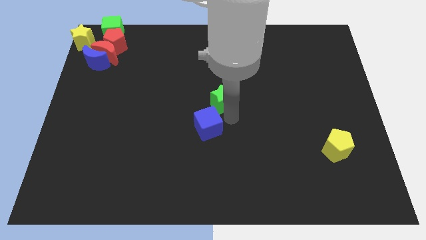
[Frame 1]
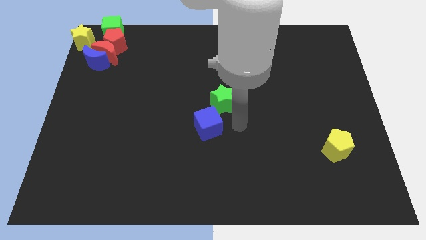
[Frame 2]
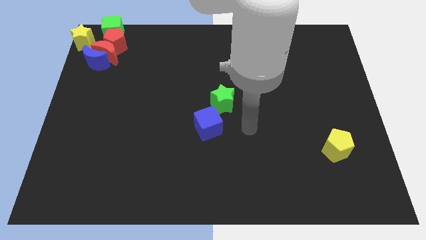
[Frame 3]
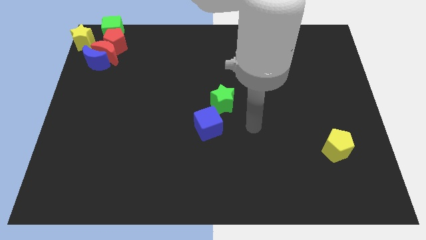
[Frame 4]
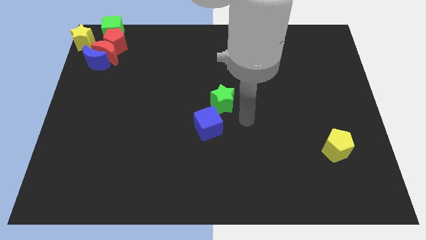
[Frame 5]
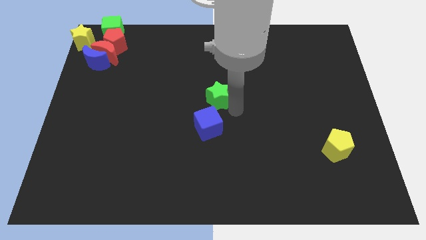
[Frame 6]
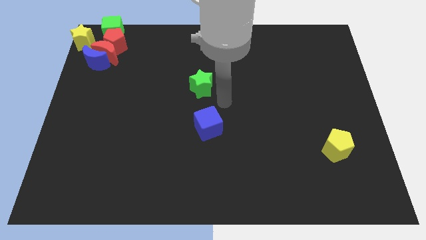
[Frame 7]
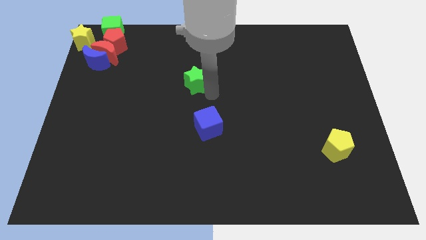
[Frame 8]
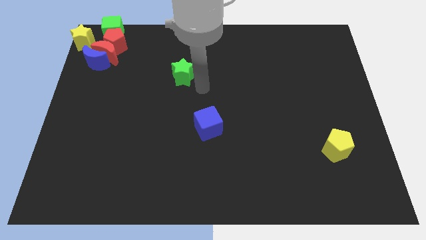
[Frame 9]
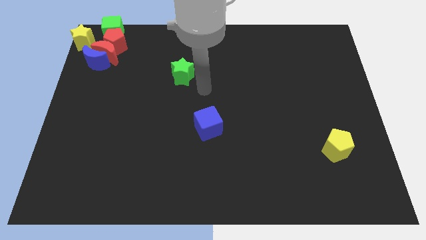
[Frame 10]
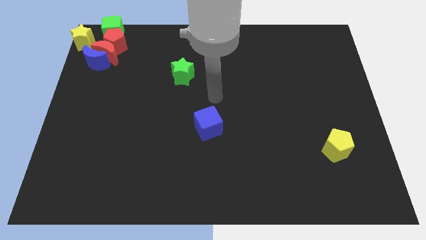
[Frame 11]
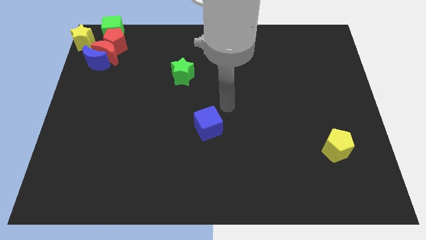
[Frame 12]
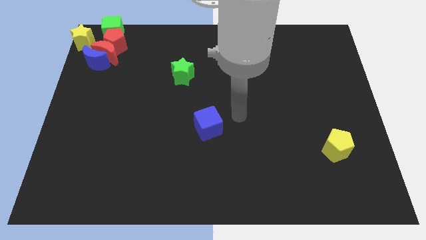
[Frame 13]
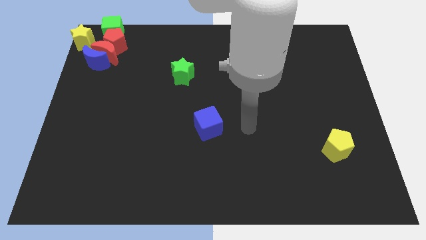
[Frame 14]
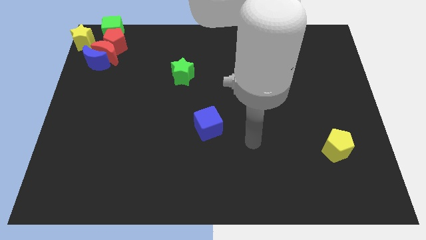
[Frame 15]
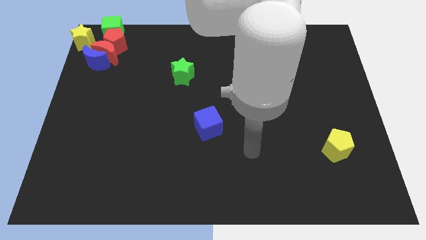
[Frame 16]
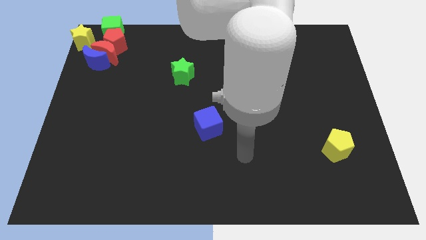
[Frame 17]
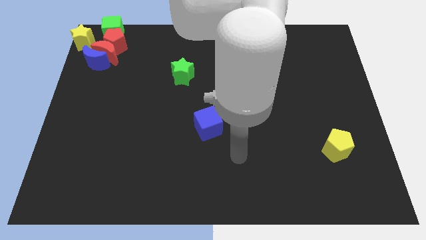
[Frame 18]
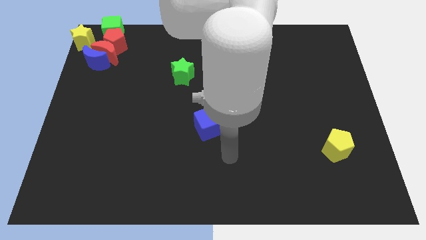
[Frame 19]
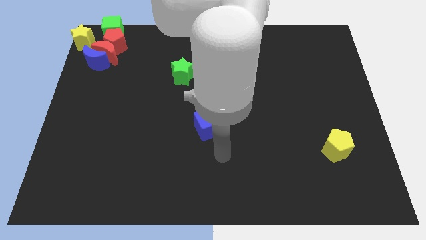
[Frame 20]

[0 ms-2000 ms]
separate the green star from the blue cube

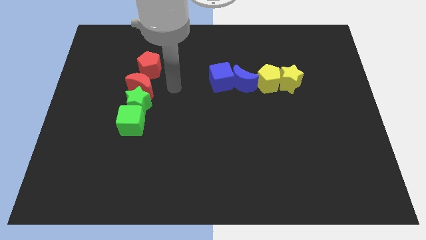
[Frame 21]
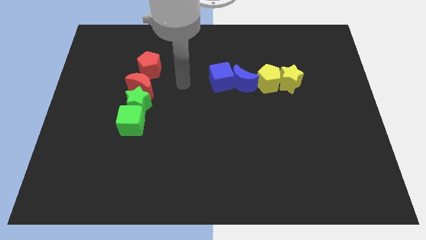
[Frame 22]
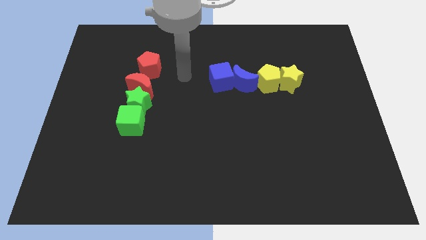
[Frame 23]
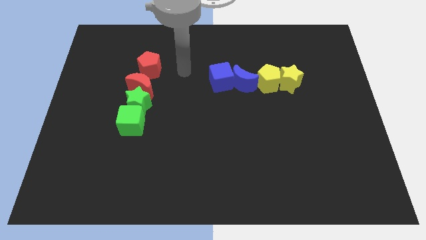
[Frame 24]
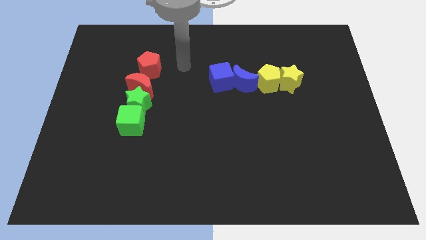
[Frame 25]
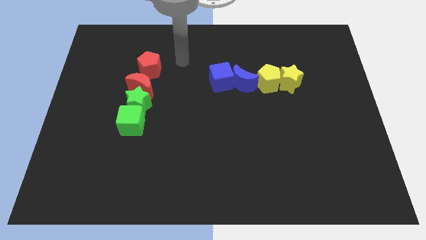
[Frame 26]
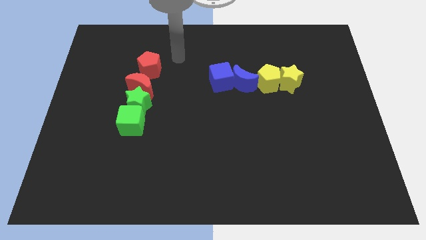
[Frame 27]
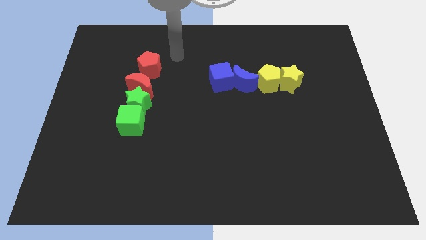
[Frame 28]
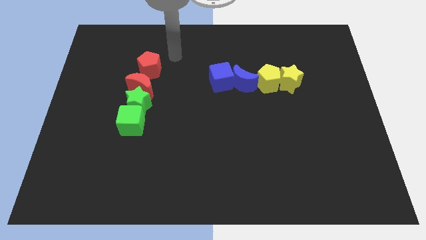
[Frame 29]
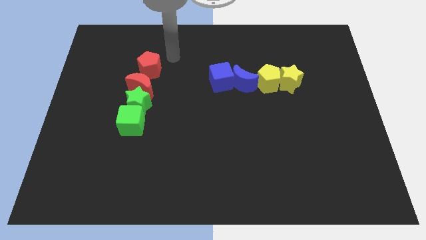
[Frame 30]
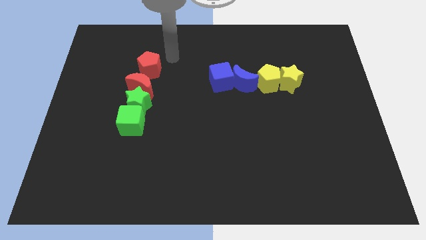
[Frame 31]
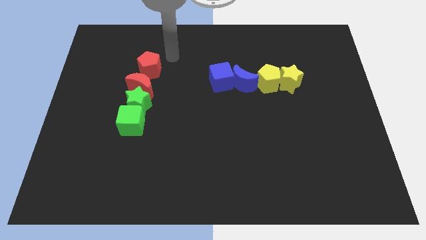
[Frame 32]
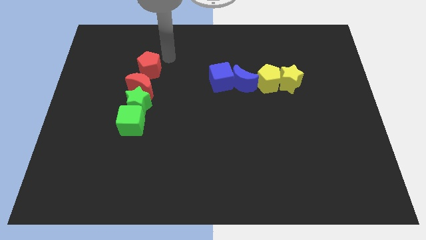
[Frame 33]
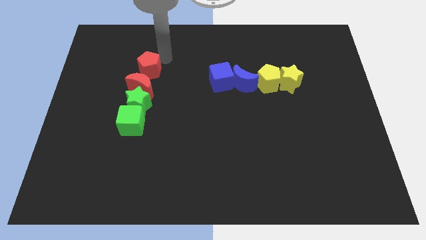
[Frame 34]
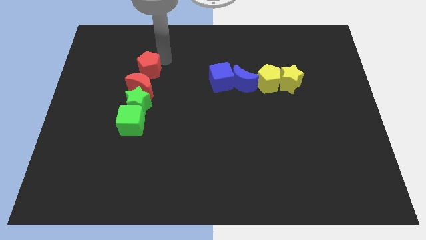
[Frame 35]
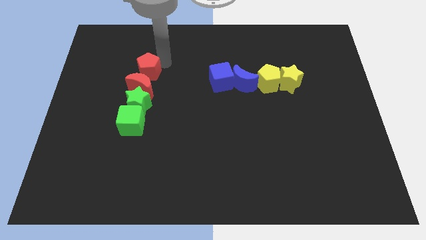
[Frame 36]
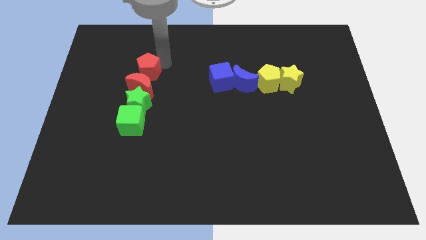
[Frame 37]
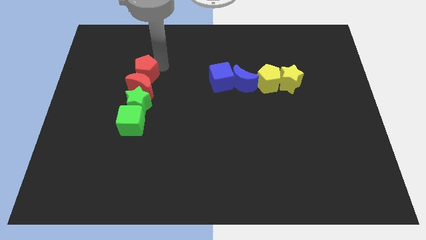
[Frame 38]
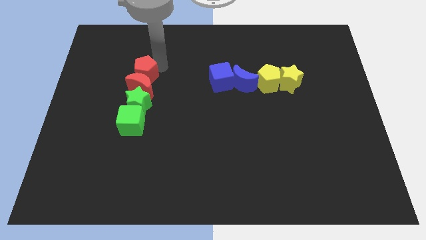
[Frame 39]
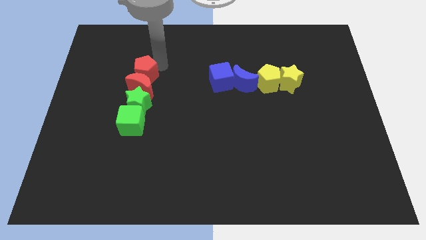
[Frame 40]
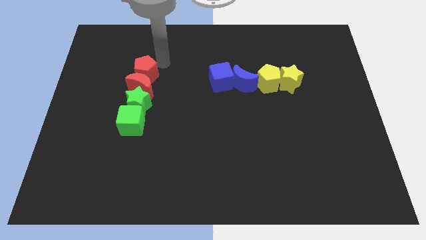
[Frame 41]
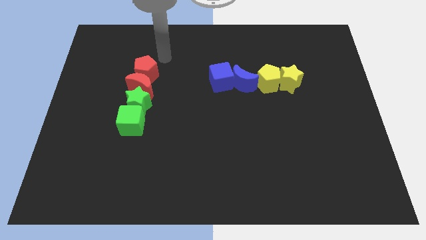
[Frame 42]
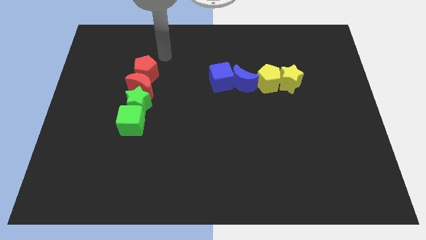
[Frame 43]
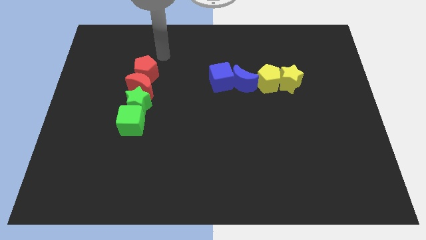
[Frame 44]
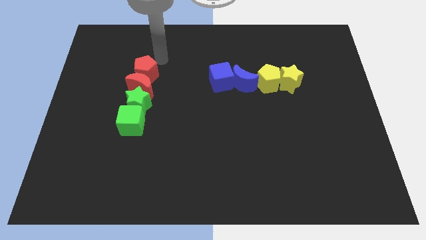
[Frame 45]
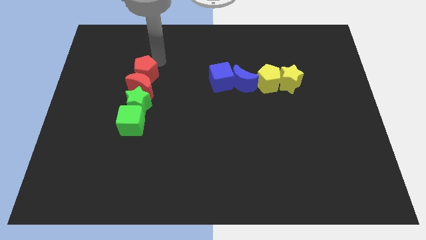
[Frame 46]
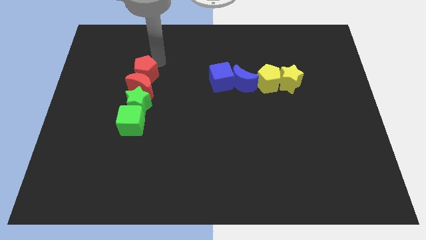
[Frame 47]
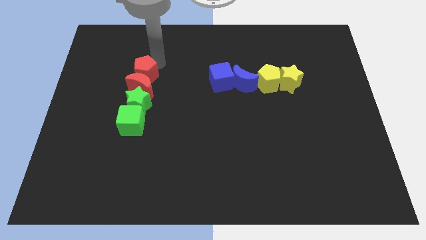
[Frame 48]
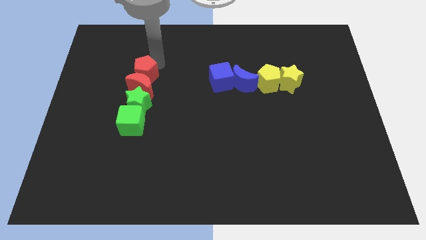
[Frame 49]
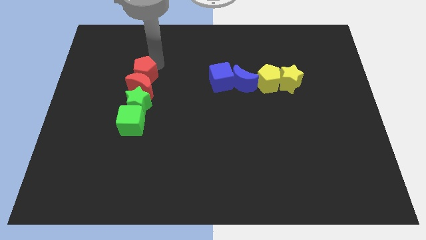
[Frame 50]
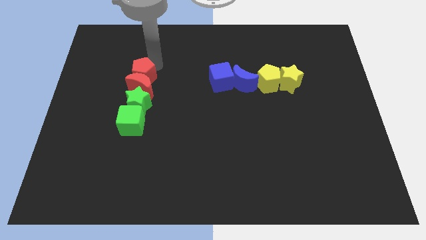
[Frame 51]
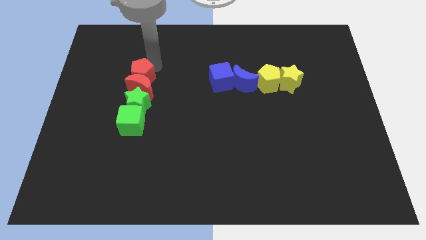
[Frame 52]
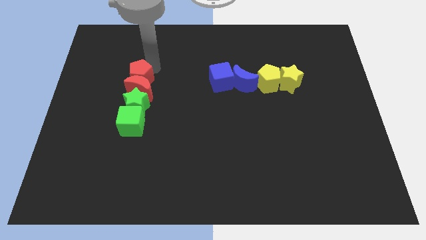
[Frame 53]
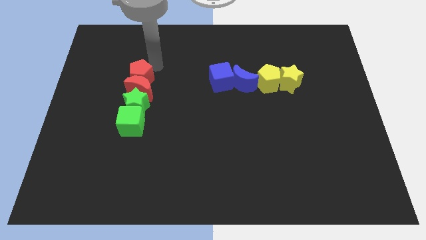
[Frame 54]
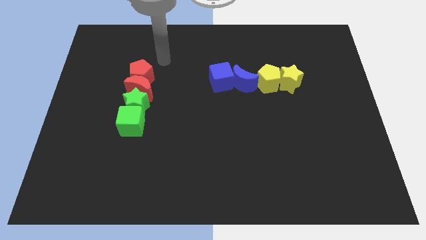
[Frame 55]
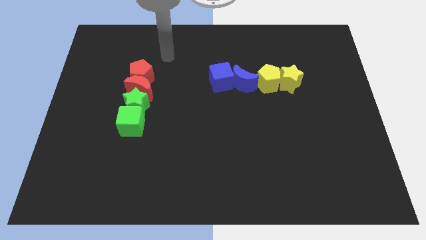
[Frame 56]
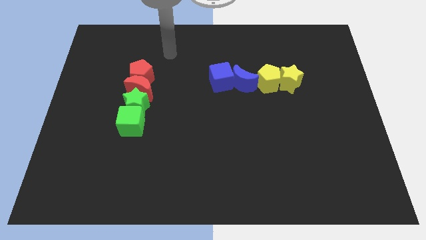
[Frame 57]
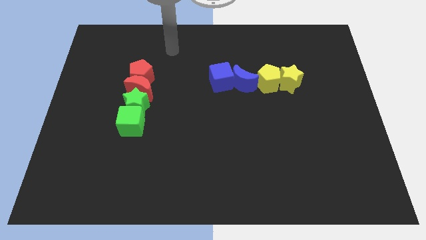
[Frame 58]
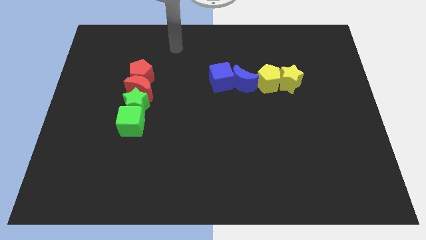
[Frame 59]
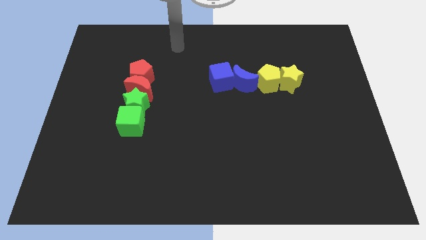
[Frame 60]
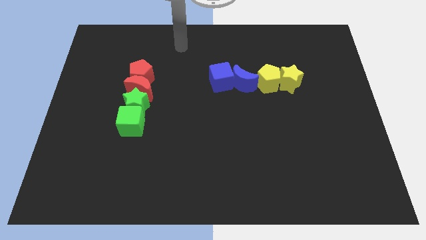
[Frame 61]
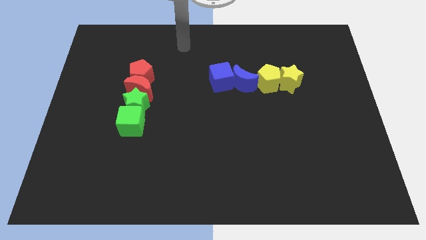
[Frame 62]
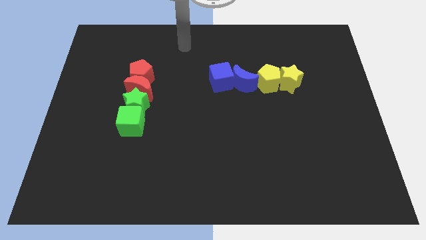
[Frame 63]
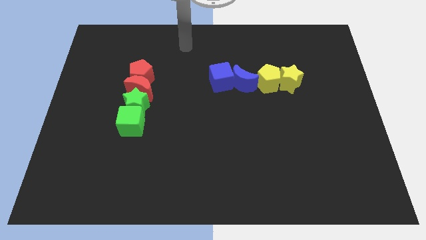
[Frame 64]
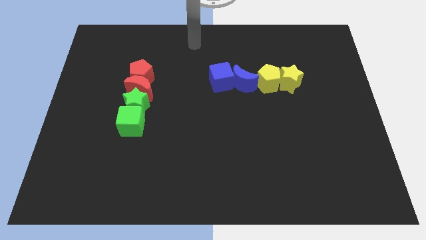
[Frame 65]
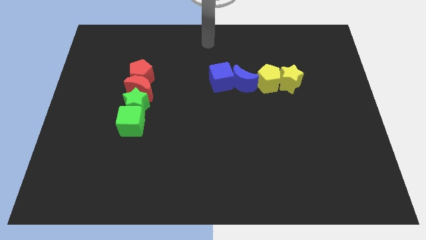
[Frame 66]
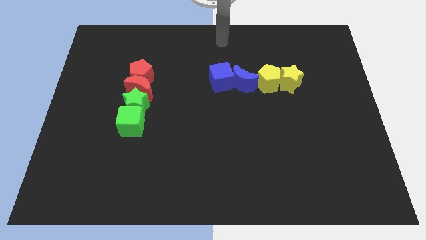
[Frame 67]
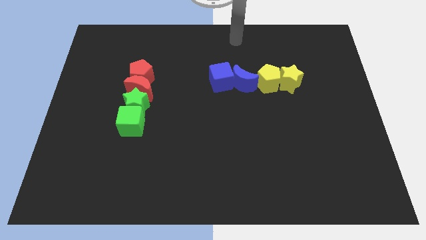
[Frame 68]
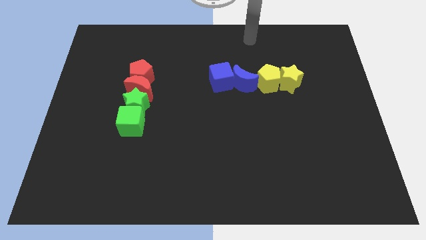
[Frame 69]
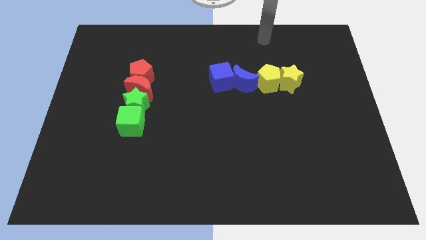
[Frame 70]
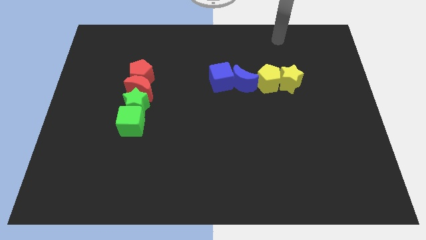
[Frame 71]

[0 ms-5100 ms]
move red pentagon to form a vertical line with other blocks

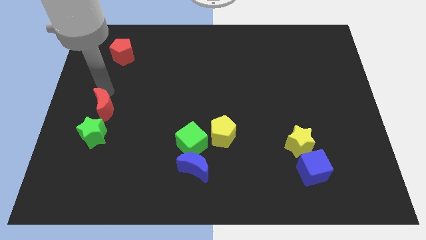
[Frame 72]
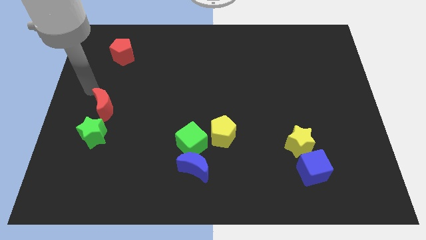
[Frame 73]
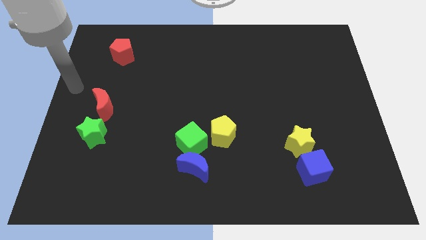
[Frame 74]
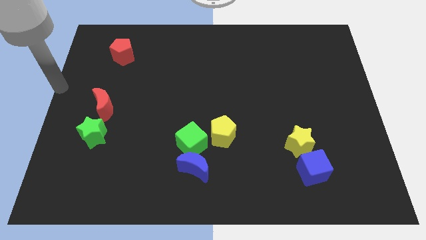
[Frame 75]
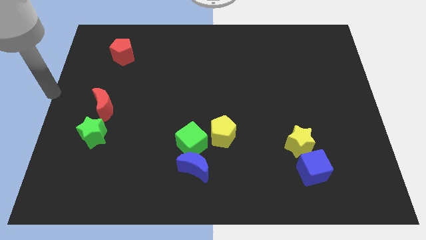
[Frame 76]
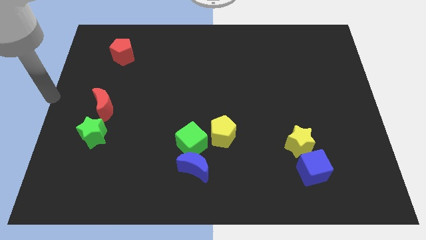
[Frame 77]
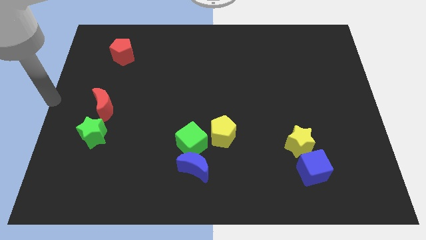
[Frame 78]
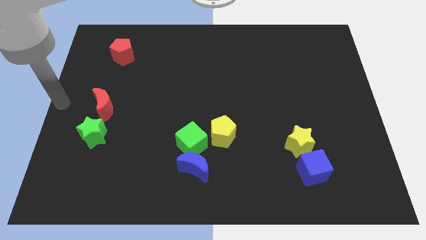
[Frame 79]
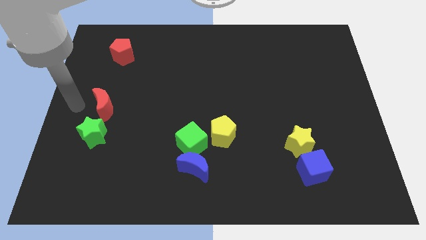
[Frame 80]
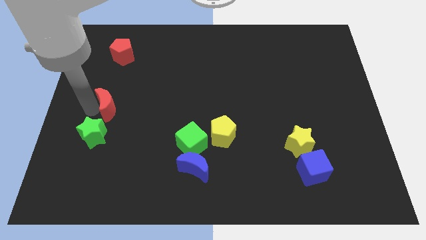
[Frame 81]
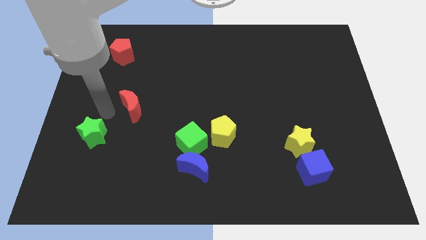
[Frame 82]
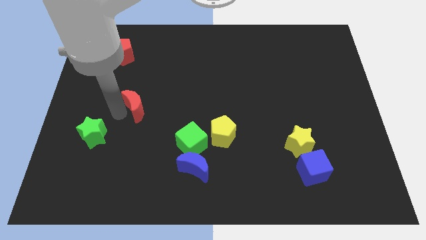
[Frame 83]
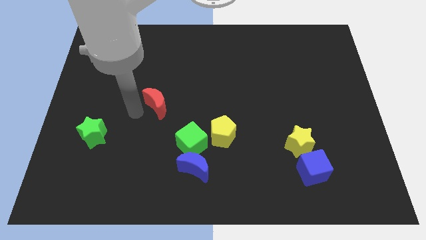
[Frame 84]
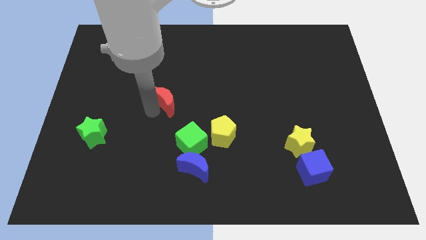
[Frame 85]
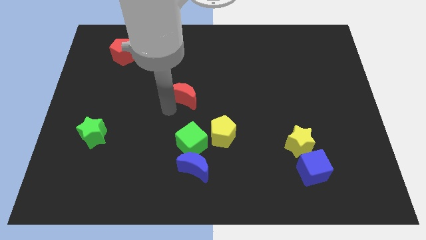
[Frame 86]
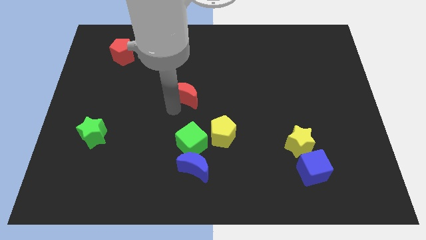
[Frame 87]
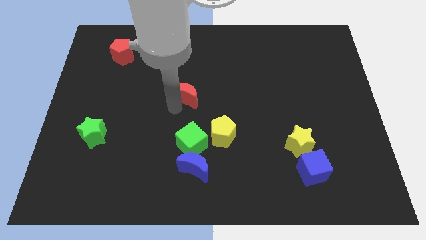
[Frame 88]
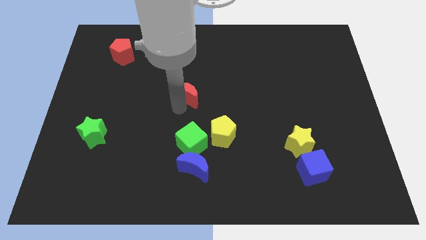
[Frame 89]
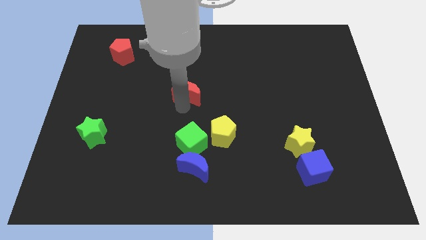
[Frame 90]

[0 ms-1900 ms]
place the red crescent vertically above the green cube
